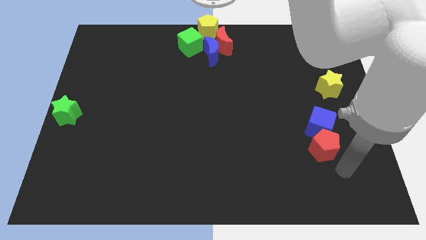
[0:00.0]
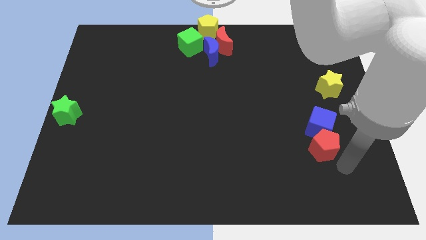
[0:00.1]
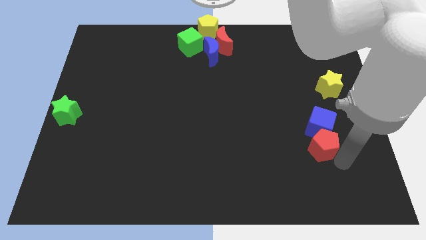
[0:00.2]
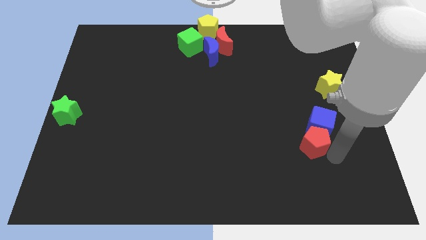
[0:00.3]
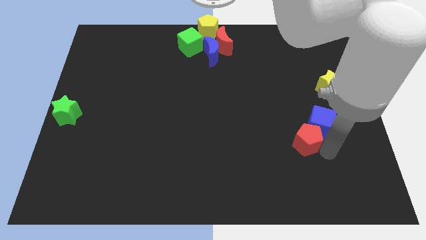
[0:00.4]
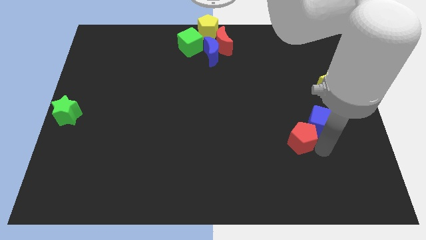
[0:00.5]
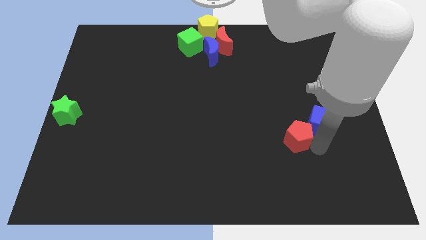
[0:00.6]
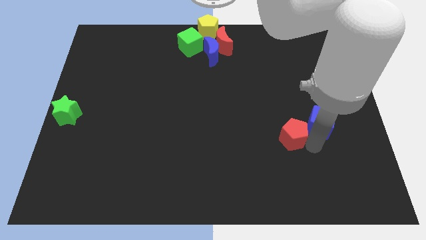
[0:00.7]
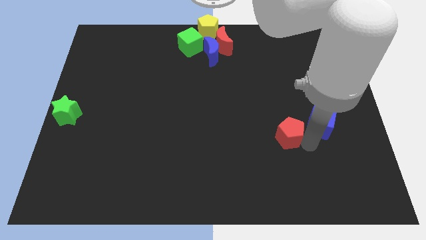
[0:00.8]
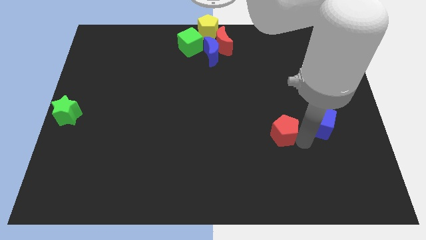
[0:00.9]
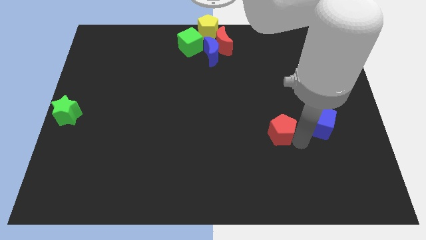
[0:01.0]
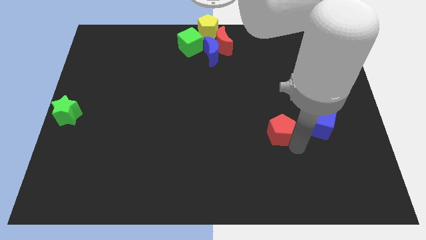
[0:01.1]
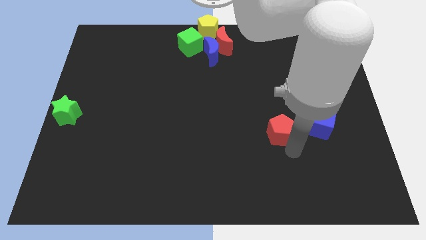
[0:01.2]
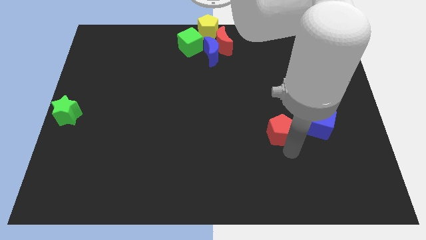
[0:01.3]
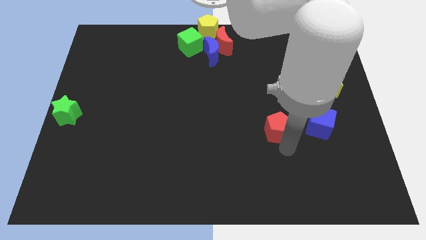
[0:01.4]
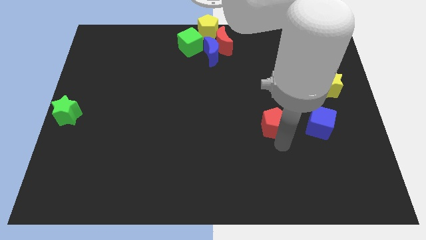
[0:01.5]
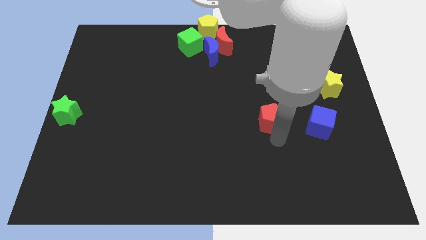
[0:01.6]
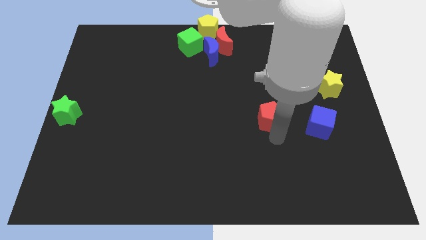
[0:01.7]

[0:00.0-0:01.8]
separate the red pentagon from the blue cube

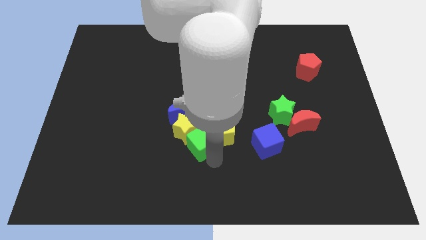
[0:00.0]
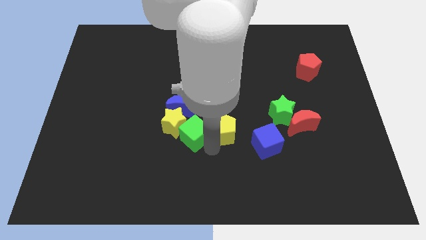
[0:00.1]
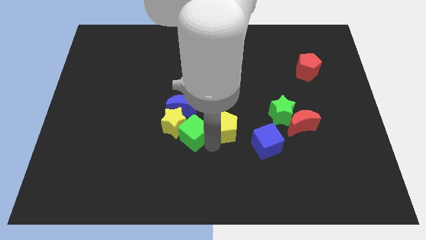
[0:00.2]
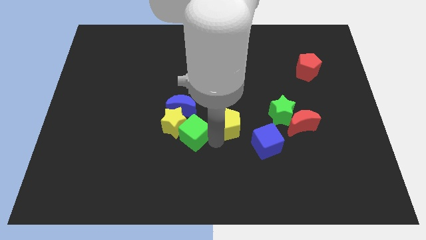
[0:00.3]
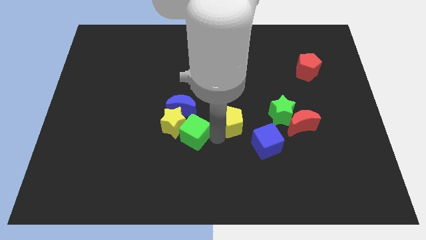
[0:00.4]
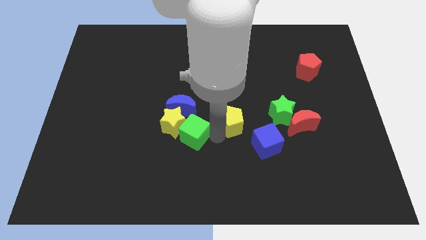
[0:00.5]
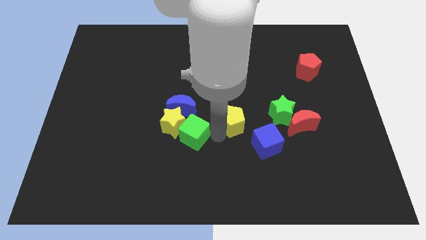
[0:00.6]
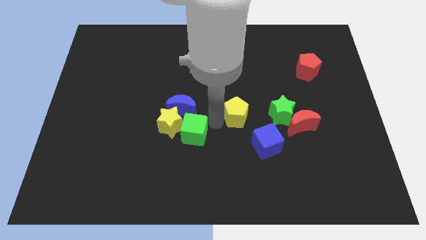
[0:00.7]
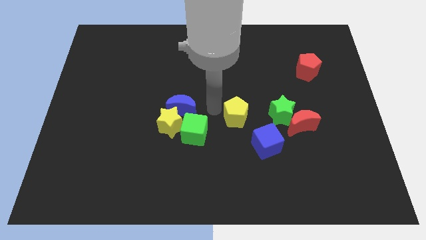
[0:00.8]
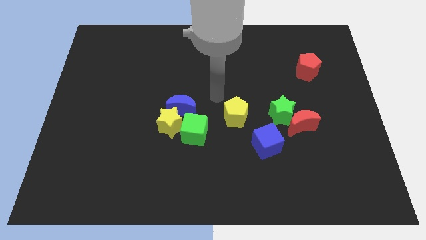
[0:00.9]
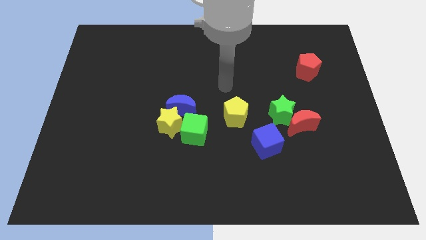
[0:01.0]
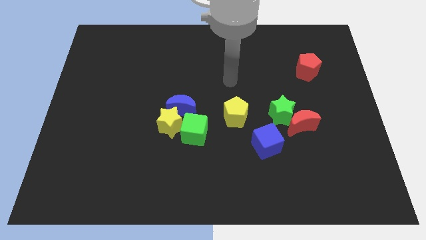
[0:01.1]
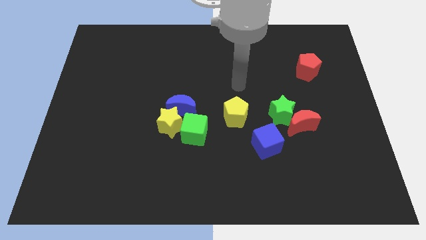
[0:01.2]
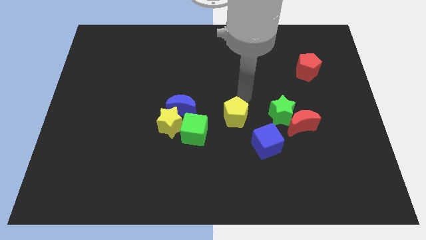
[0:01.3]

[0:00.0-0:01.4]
separate yellow pentagon from the green cube

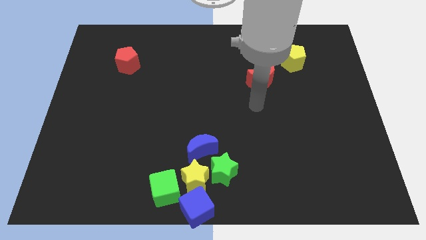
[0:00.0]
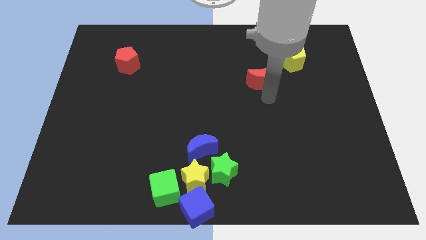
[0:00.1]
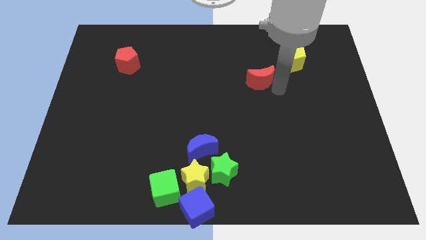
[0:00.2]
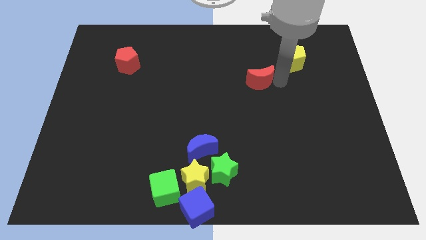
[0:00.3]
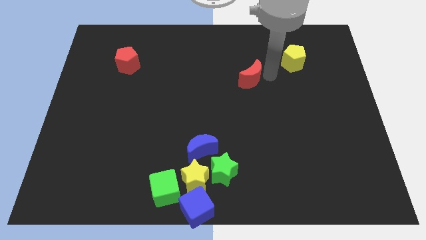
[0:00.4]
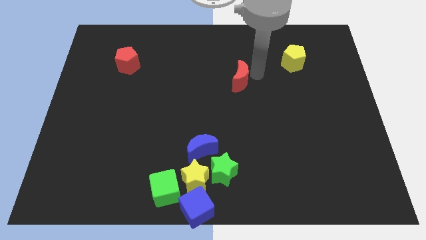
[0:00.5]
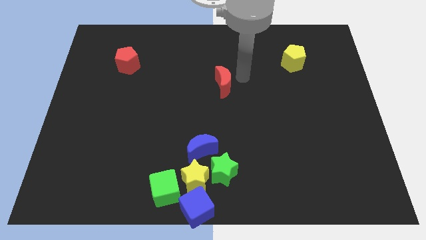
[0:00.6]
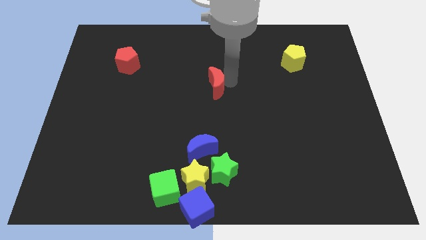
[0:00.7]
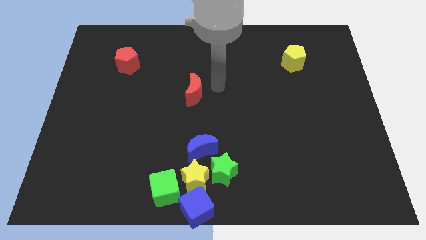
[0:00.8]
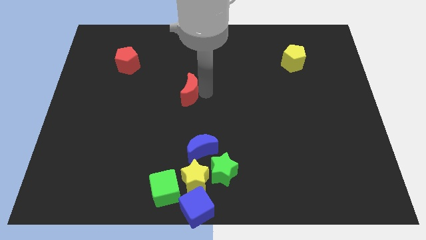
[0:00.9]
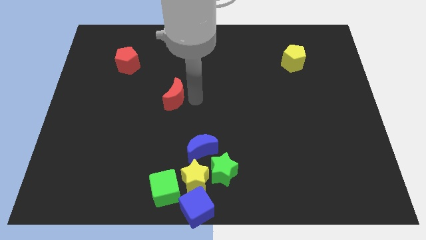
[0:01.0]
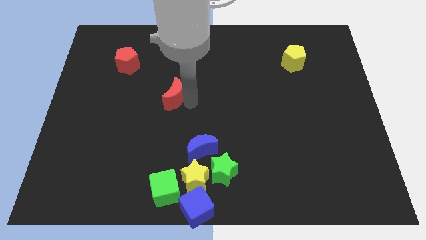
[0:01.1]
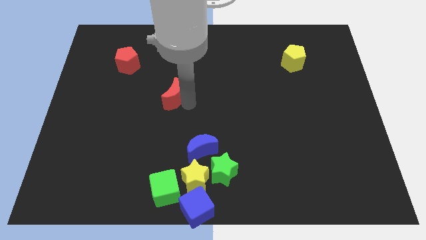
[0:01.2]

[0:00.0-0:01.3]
place the red moon diagonal to red pentagon

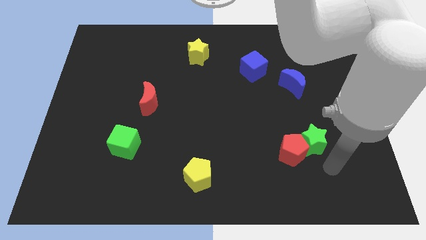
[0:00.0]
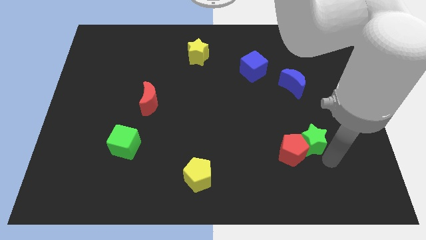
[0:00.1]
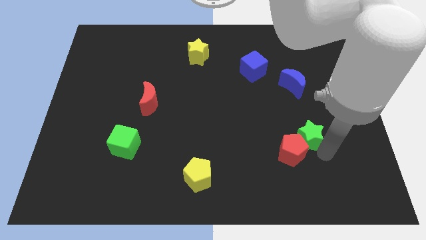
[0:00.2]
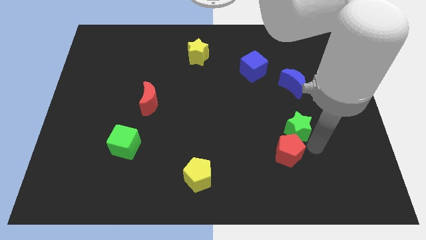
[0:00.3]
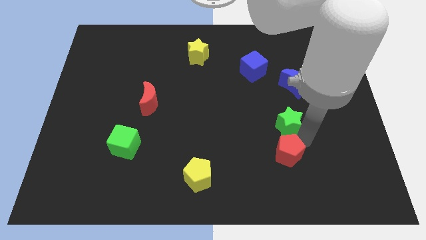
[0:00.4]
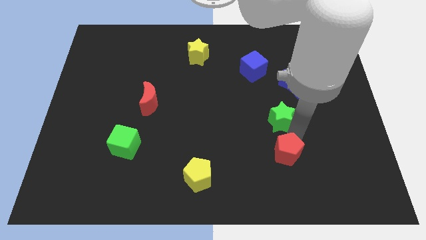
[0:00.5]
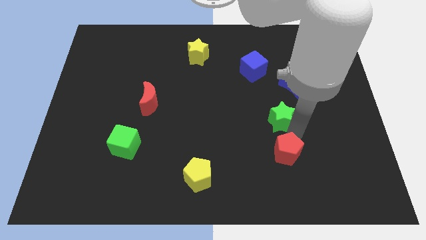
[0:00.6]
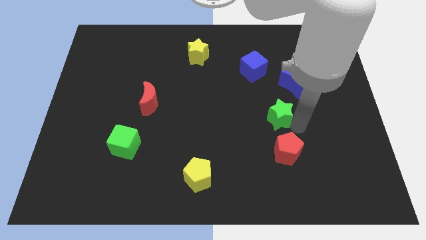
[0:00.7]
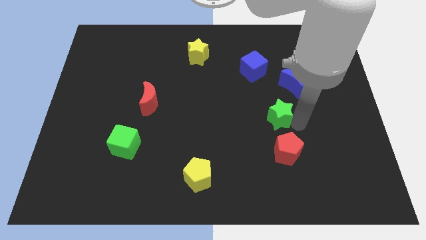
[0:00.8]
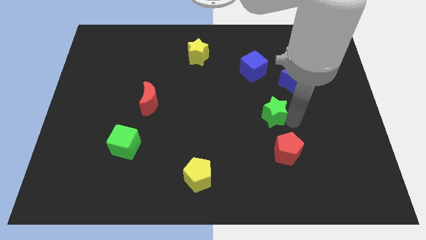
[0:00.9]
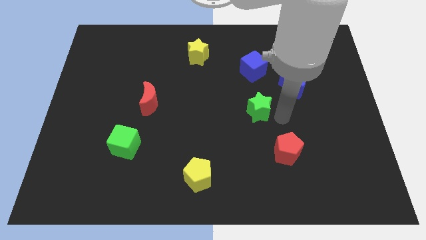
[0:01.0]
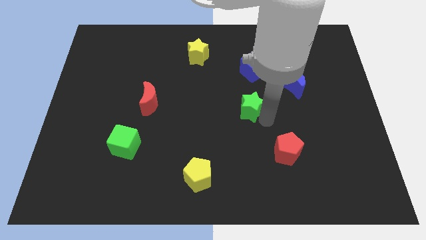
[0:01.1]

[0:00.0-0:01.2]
place the green star below the blue moon

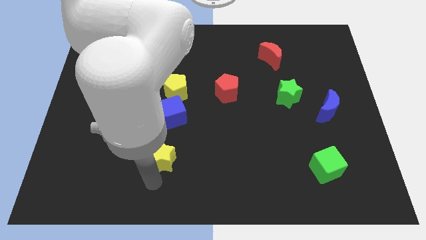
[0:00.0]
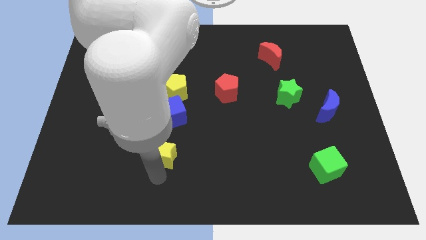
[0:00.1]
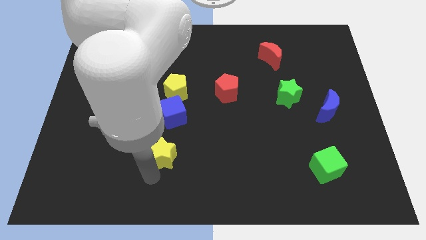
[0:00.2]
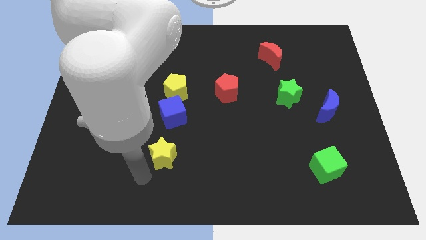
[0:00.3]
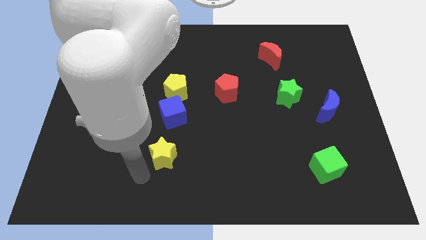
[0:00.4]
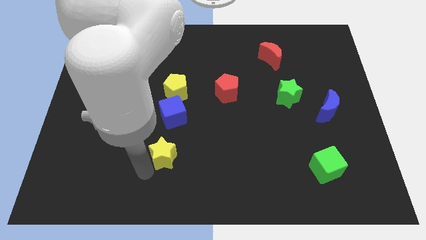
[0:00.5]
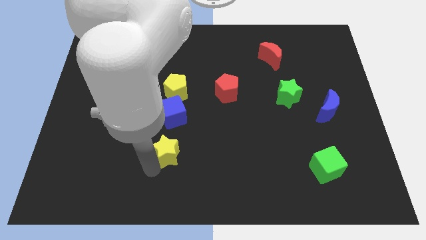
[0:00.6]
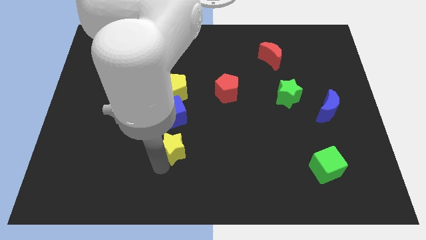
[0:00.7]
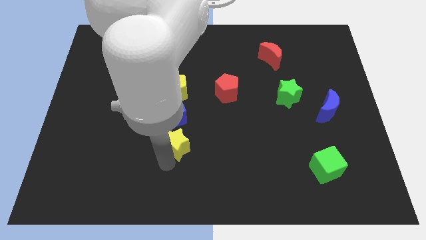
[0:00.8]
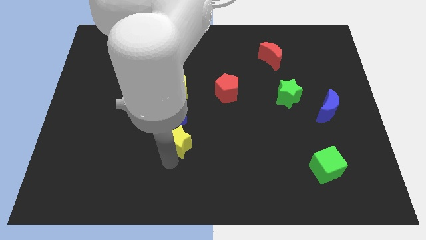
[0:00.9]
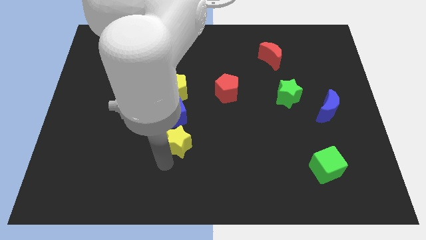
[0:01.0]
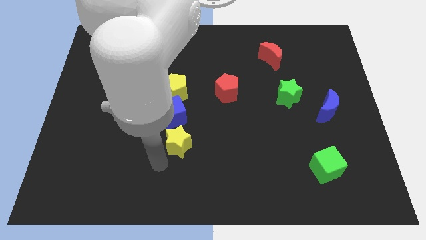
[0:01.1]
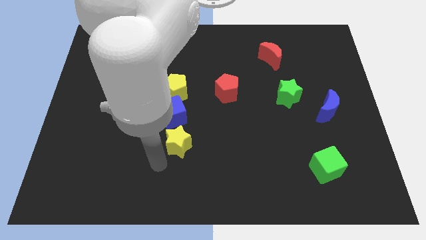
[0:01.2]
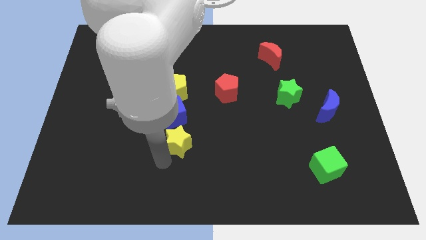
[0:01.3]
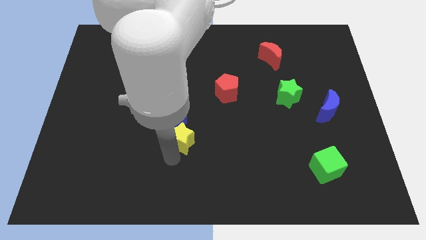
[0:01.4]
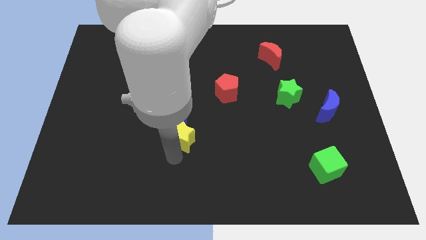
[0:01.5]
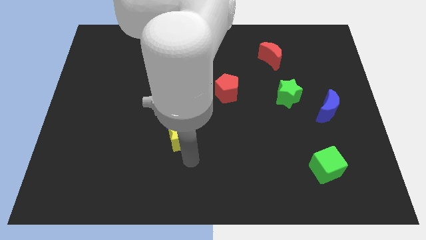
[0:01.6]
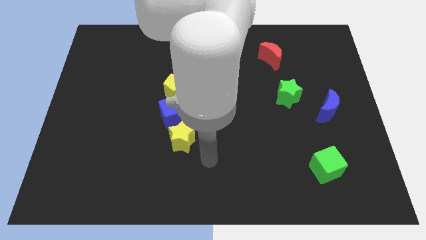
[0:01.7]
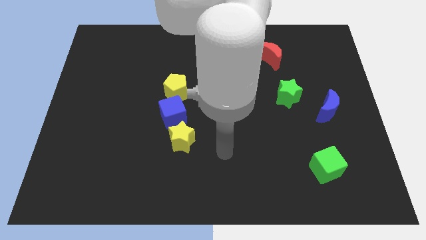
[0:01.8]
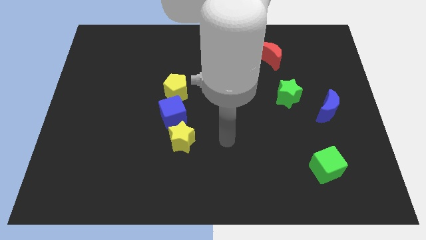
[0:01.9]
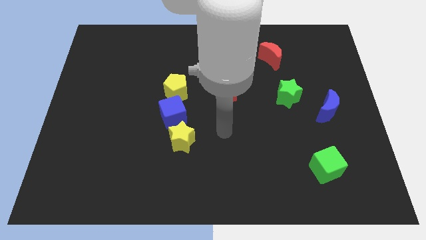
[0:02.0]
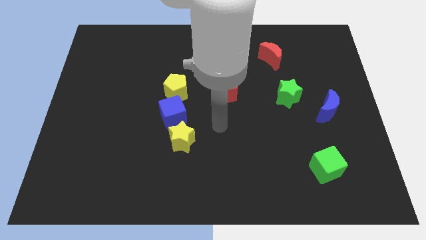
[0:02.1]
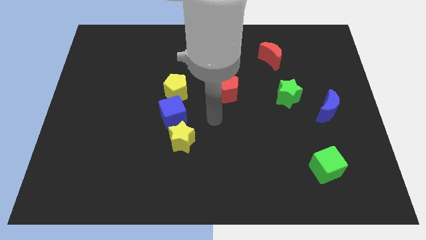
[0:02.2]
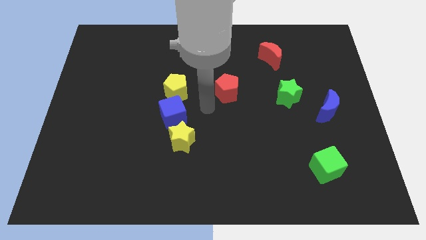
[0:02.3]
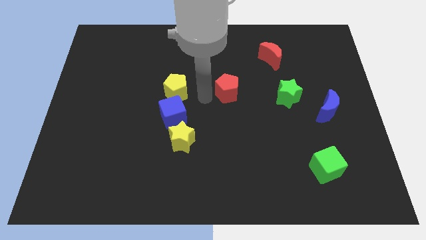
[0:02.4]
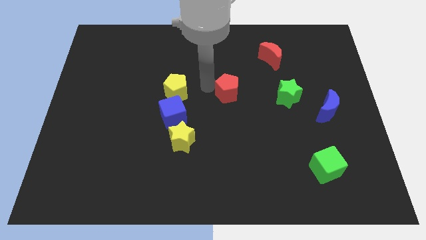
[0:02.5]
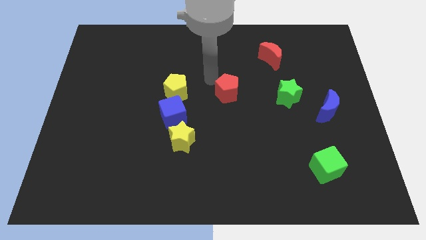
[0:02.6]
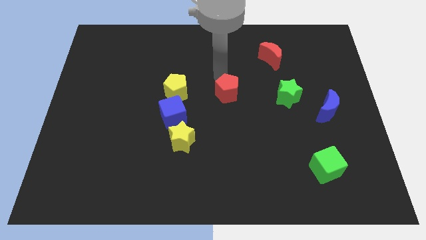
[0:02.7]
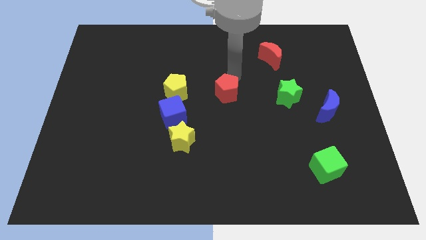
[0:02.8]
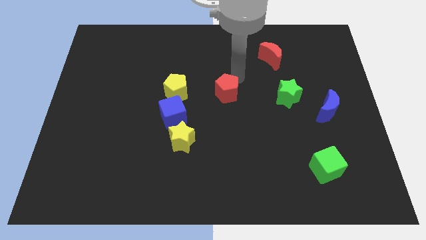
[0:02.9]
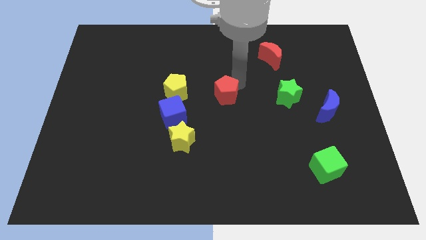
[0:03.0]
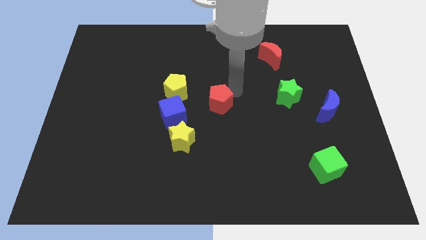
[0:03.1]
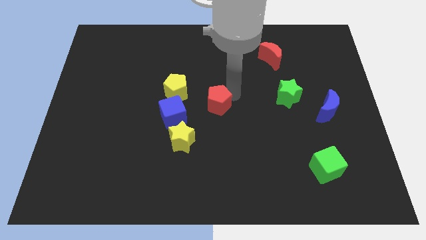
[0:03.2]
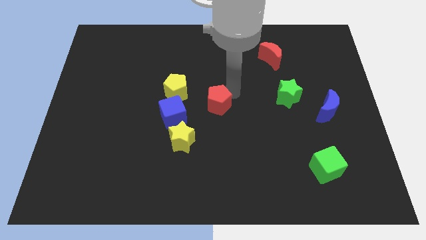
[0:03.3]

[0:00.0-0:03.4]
put the yellow star underneath the blue cube

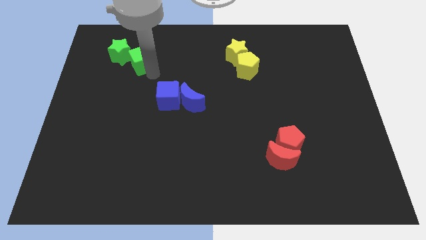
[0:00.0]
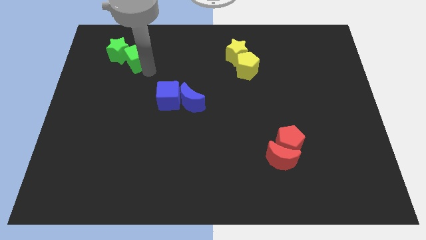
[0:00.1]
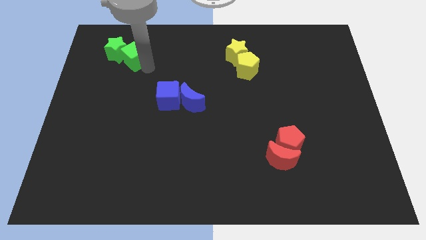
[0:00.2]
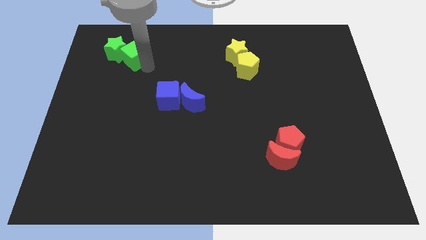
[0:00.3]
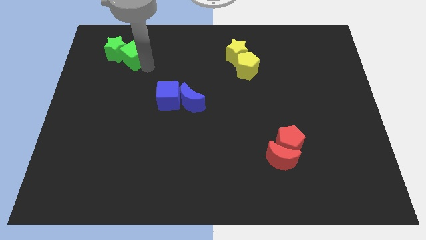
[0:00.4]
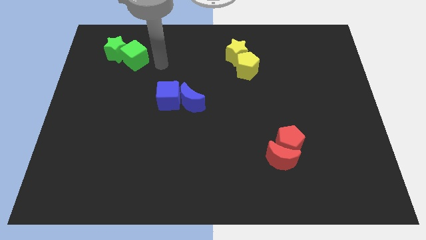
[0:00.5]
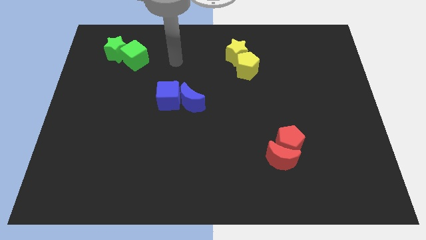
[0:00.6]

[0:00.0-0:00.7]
move your arm away from green star
